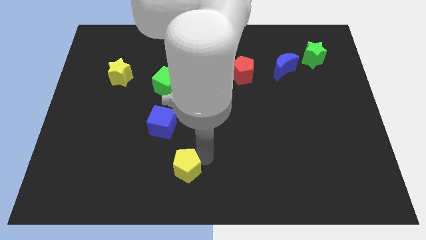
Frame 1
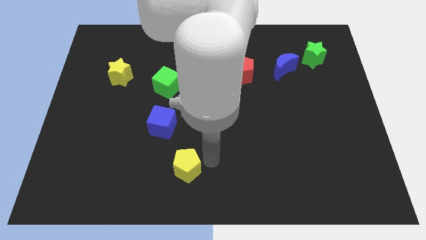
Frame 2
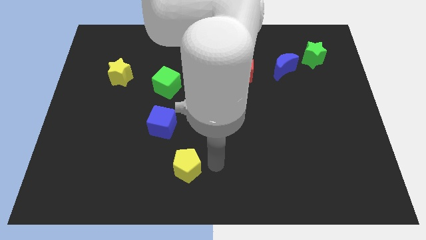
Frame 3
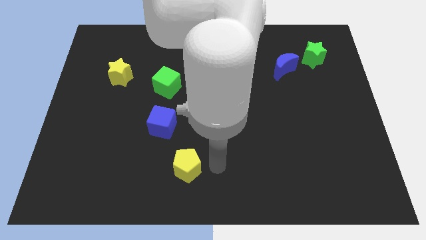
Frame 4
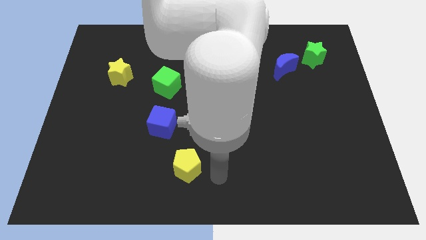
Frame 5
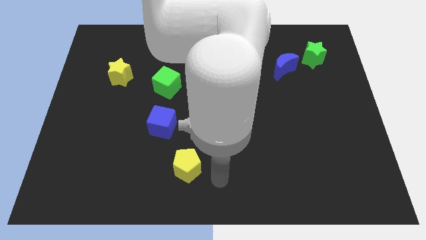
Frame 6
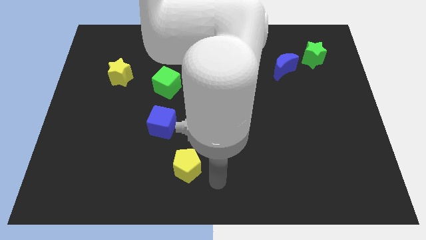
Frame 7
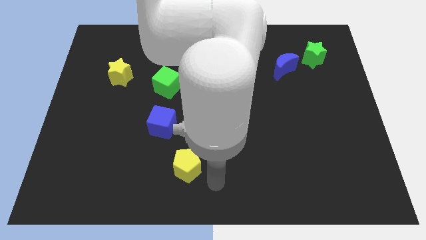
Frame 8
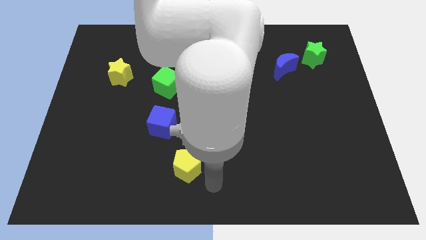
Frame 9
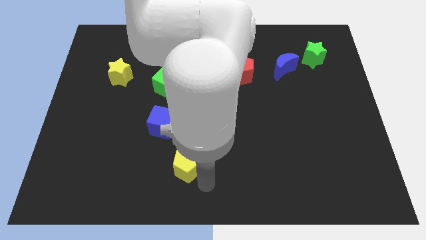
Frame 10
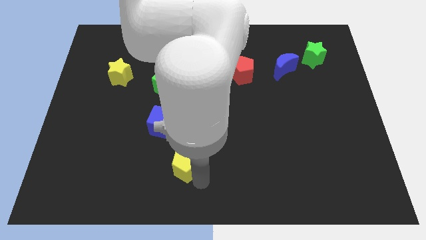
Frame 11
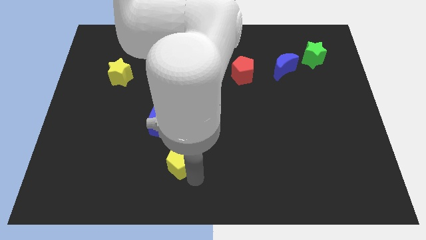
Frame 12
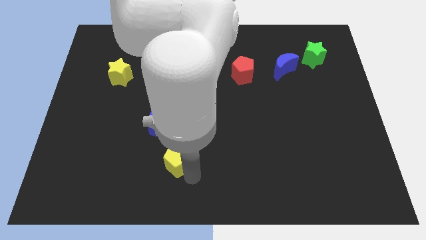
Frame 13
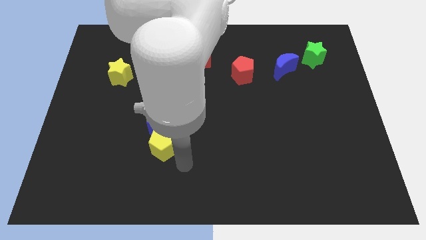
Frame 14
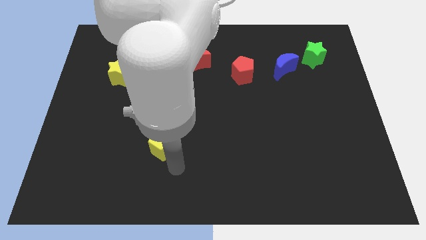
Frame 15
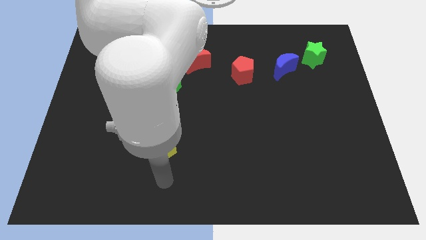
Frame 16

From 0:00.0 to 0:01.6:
place yellow pentagon below blue cube

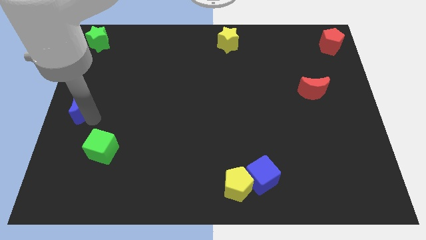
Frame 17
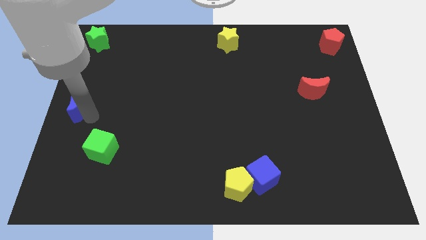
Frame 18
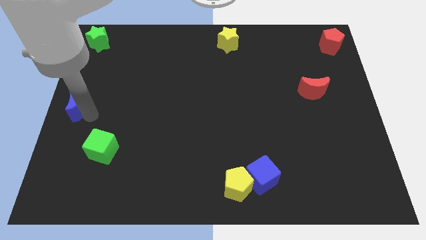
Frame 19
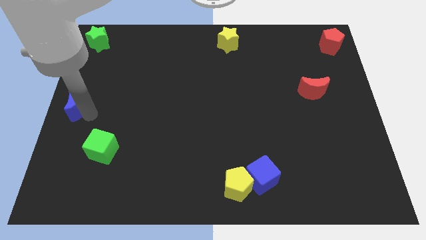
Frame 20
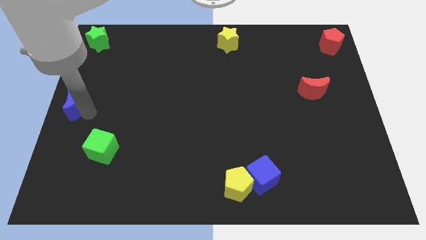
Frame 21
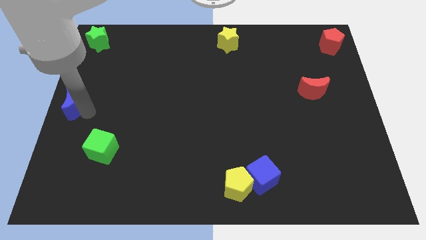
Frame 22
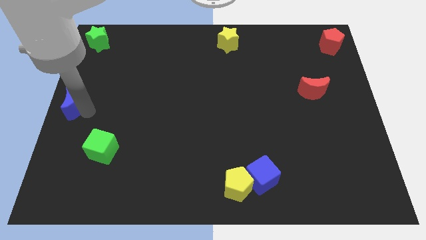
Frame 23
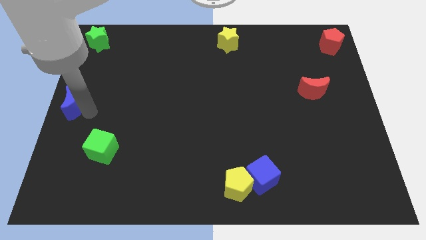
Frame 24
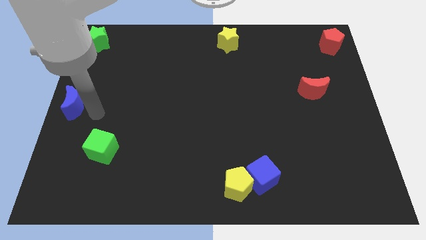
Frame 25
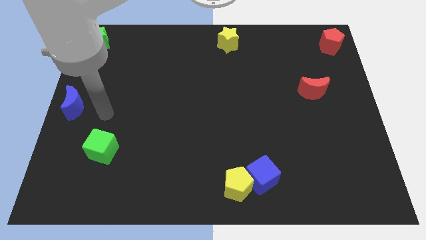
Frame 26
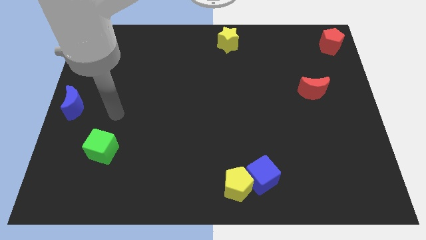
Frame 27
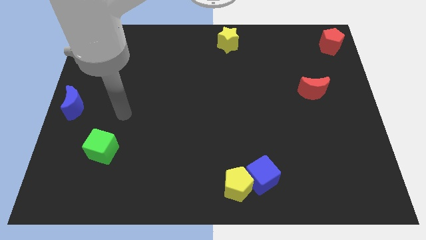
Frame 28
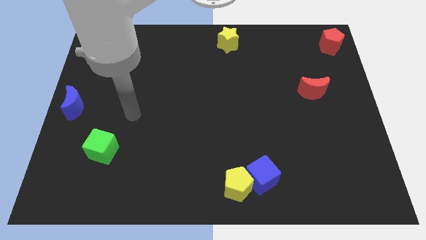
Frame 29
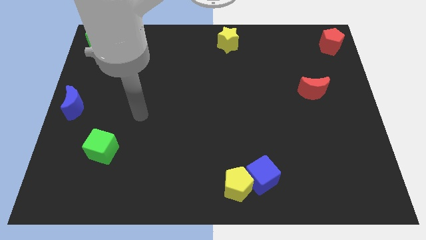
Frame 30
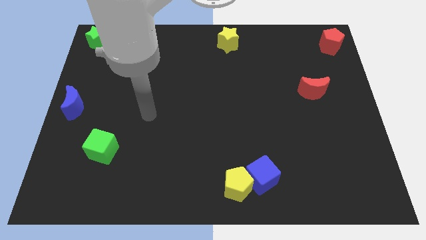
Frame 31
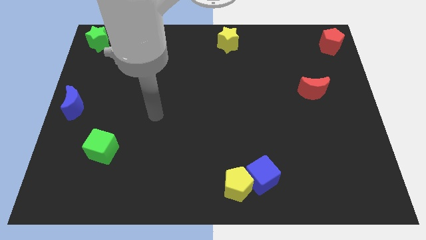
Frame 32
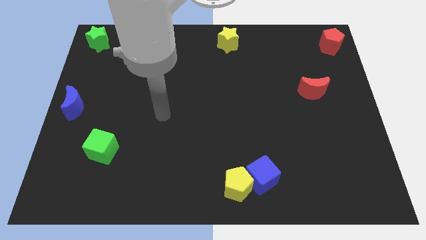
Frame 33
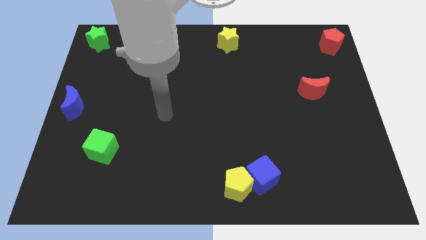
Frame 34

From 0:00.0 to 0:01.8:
put the blue moon at the left center of the board

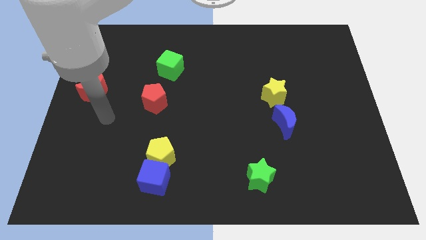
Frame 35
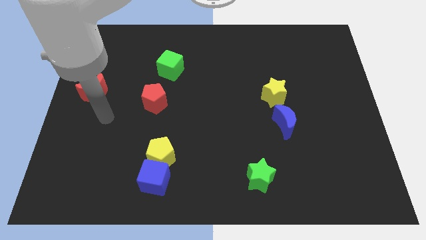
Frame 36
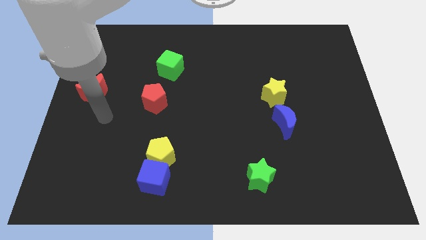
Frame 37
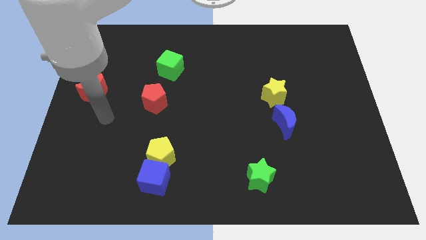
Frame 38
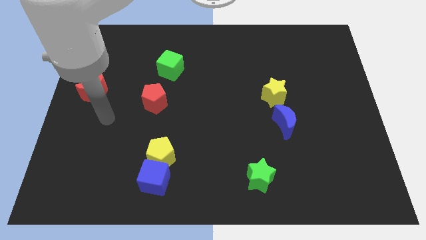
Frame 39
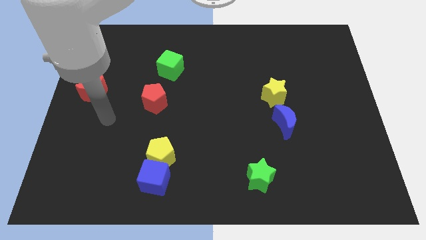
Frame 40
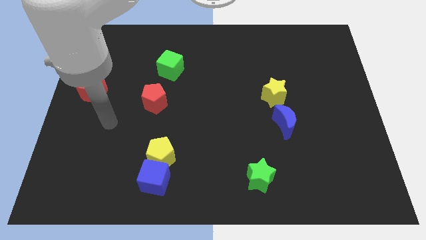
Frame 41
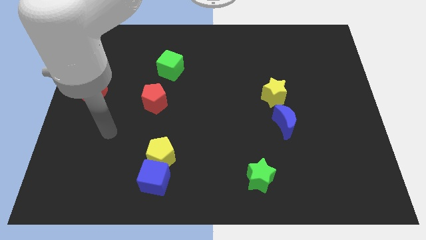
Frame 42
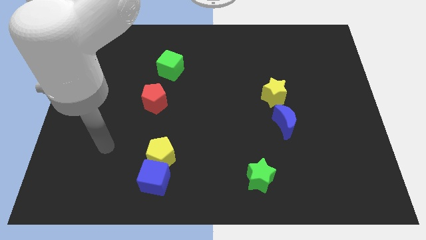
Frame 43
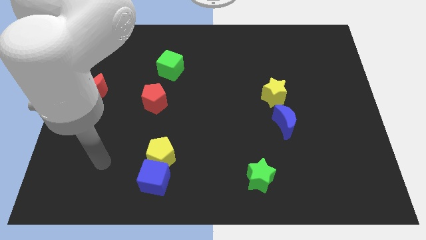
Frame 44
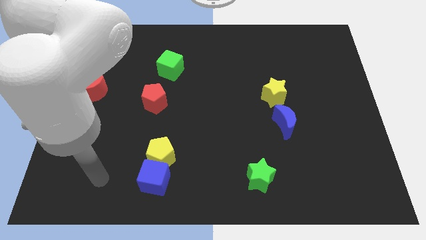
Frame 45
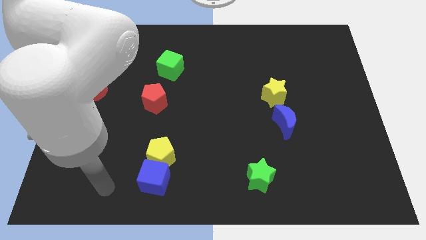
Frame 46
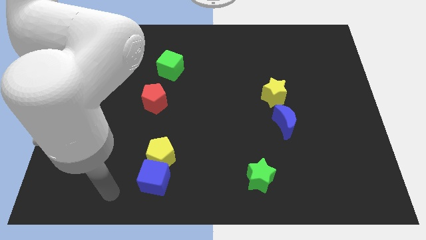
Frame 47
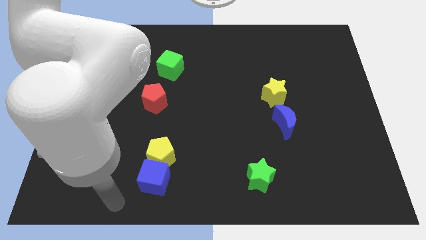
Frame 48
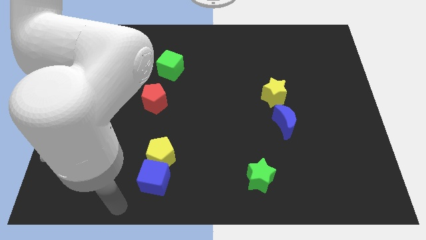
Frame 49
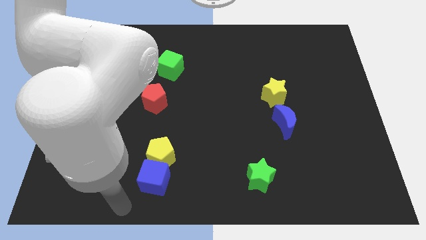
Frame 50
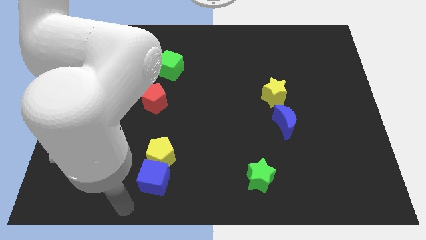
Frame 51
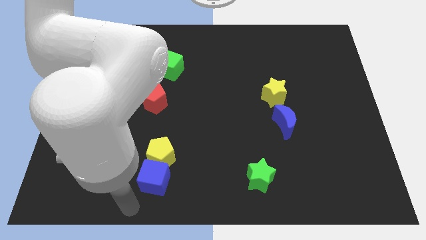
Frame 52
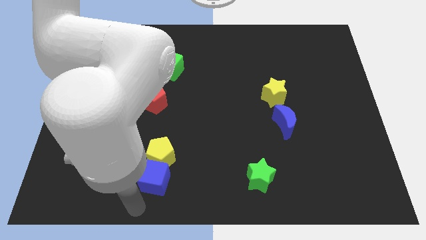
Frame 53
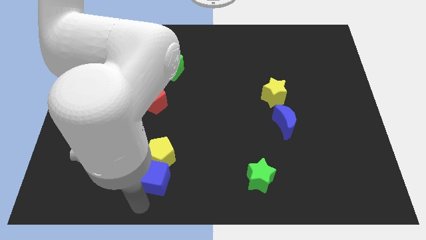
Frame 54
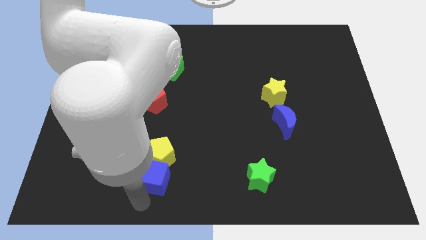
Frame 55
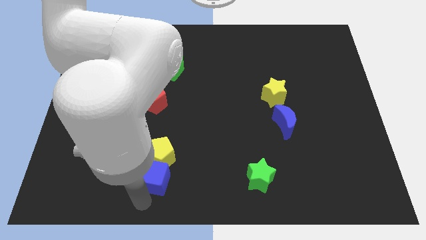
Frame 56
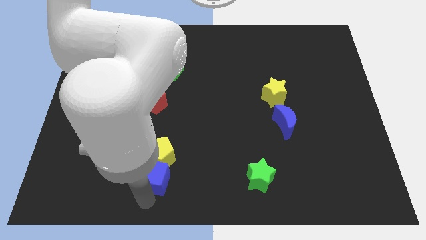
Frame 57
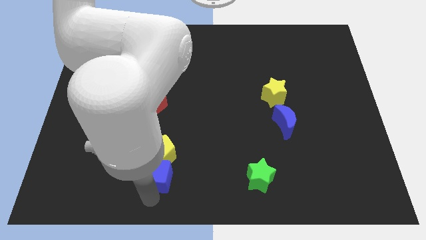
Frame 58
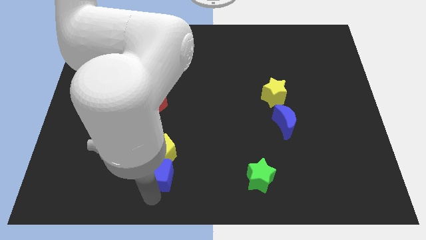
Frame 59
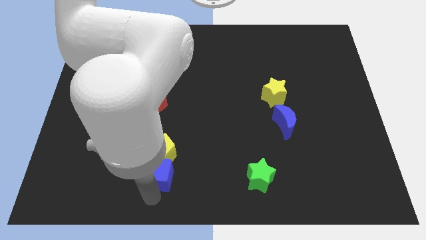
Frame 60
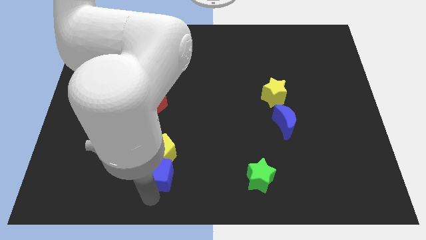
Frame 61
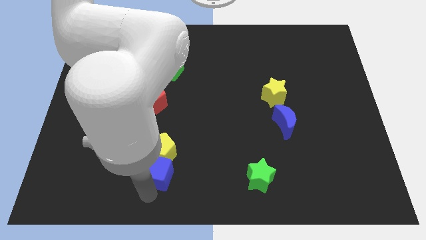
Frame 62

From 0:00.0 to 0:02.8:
place the arm under the blue cube

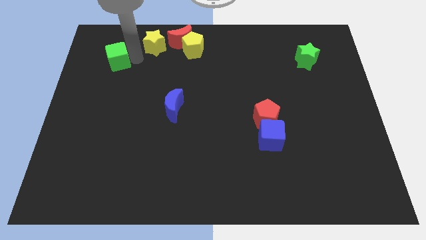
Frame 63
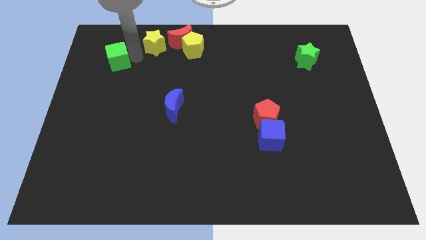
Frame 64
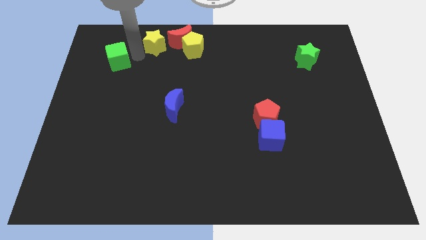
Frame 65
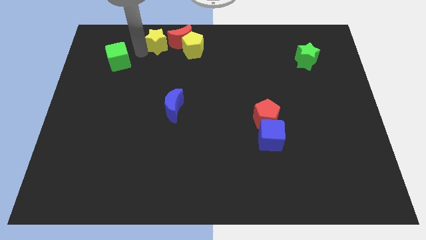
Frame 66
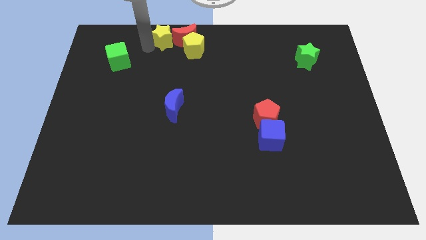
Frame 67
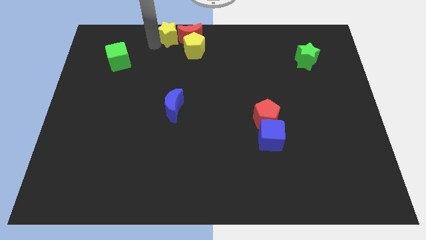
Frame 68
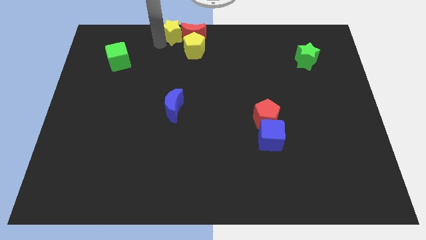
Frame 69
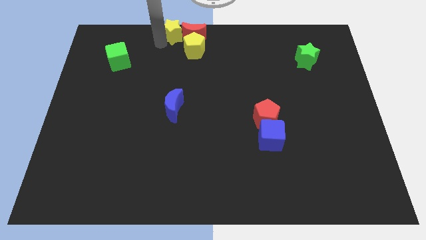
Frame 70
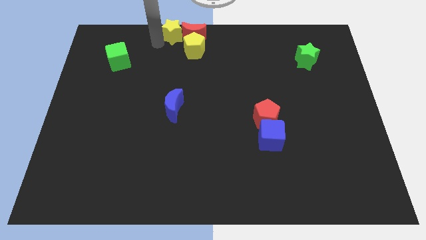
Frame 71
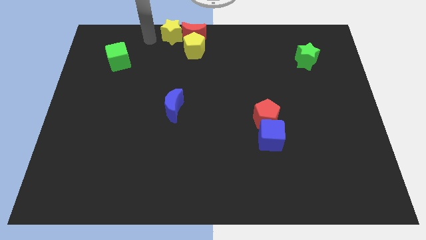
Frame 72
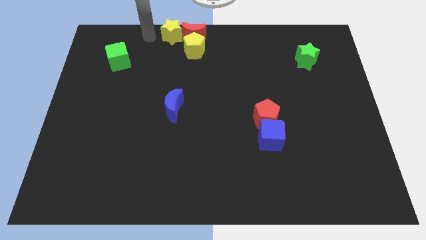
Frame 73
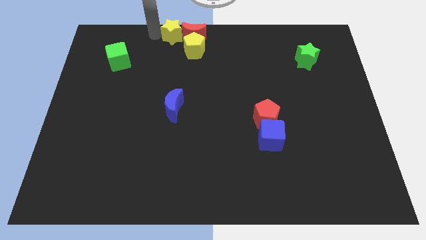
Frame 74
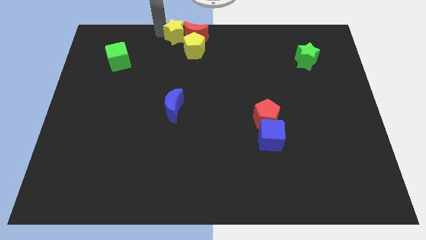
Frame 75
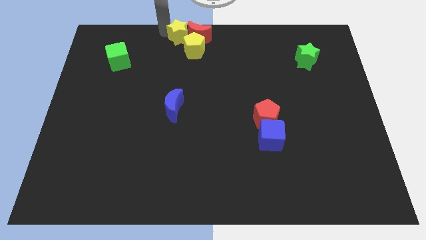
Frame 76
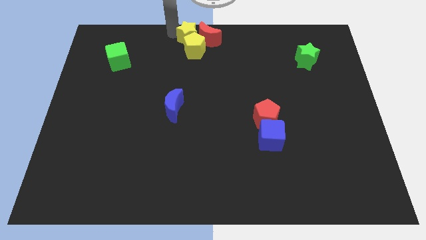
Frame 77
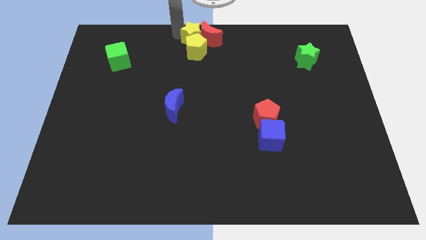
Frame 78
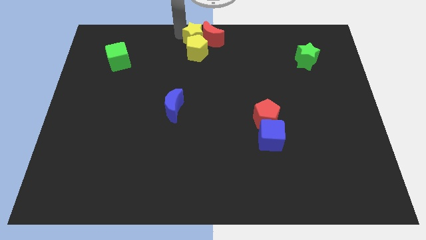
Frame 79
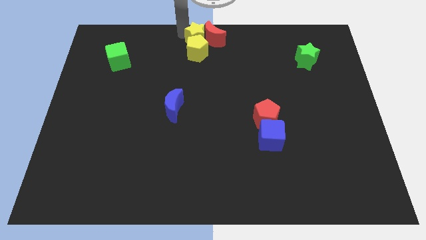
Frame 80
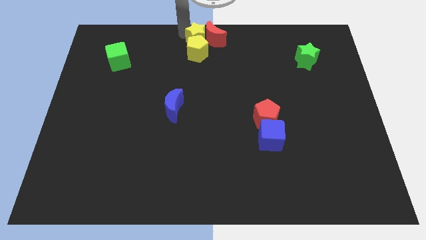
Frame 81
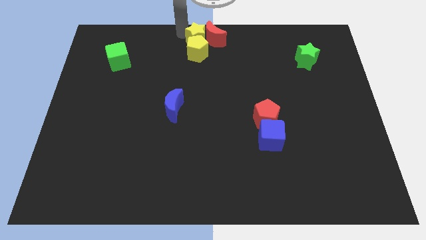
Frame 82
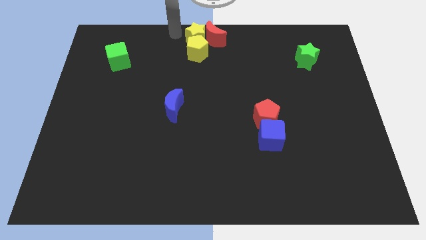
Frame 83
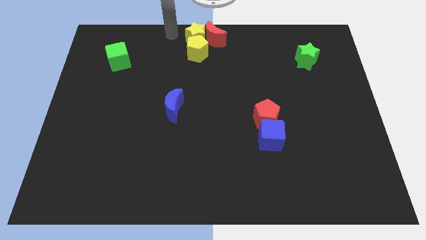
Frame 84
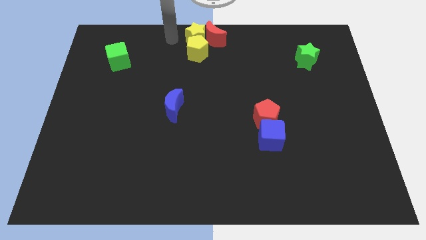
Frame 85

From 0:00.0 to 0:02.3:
push yellow star towards the top center of the board
